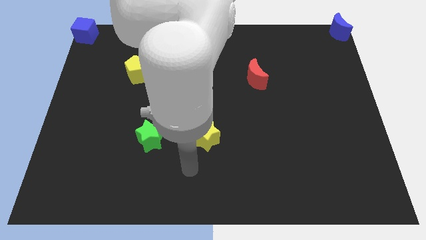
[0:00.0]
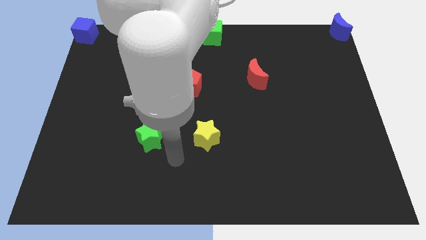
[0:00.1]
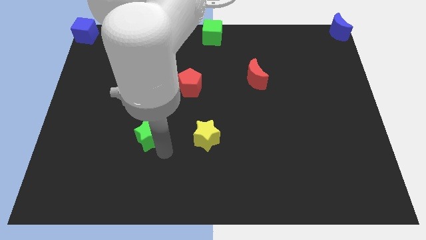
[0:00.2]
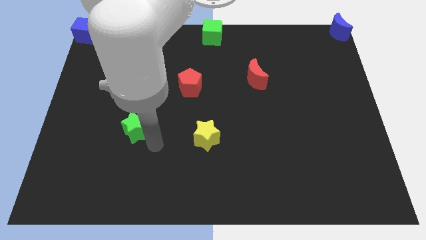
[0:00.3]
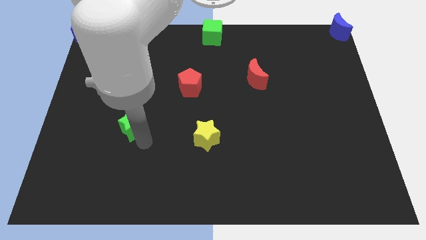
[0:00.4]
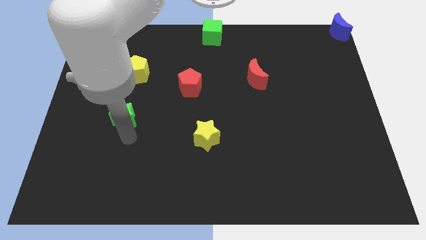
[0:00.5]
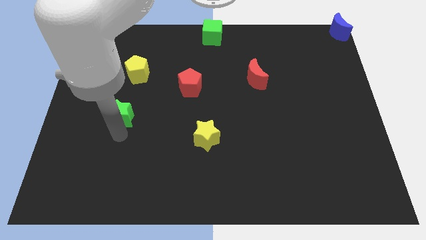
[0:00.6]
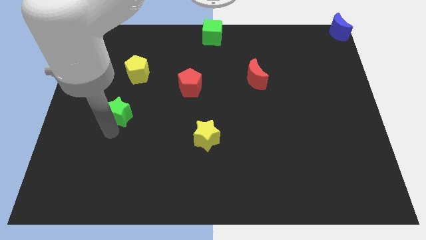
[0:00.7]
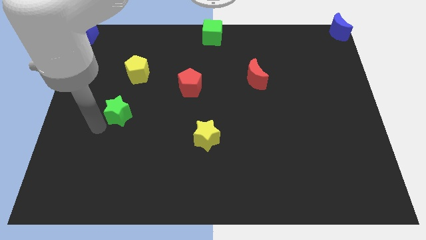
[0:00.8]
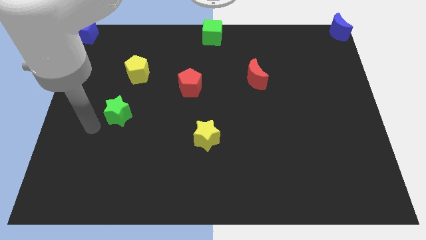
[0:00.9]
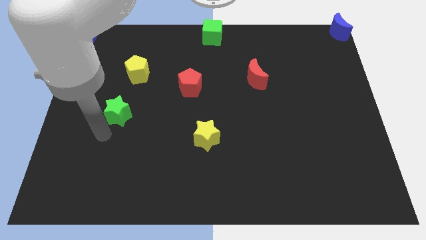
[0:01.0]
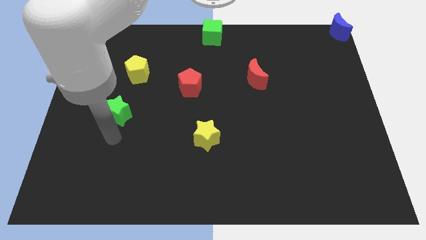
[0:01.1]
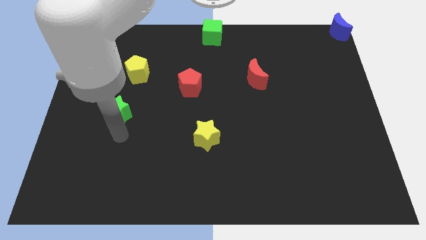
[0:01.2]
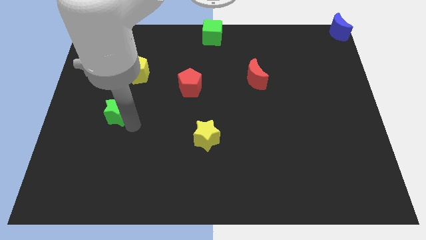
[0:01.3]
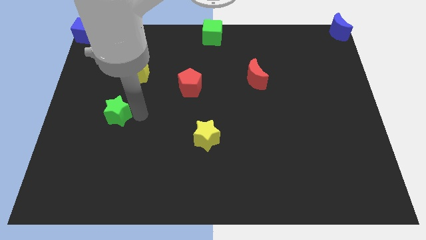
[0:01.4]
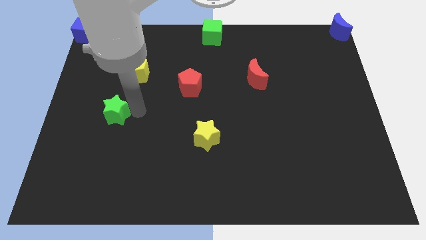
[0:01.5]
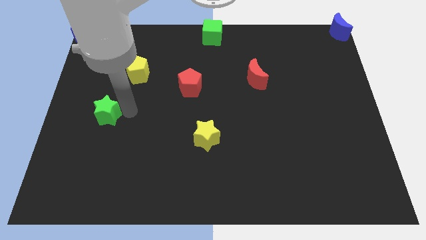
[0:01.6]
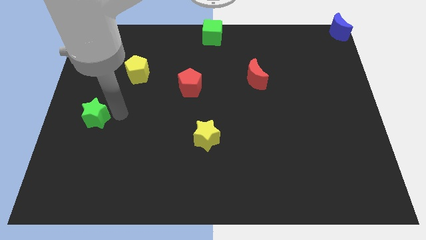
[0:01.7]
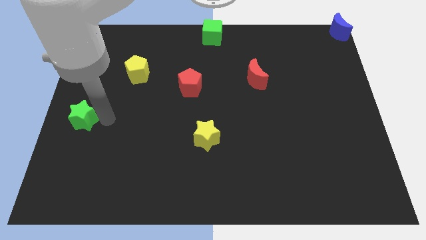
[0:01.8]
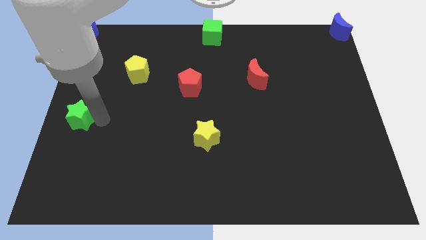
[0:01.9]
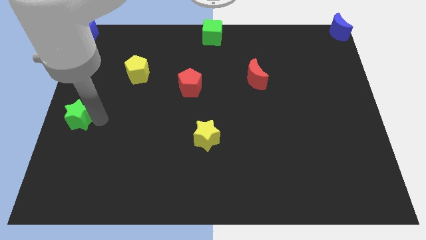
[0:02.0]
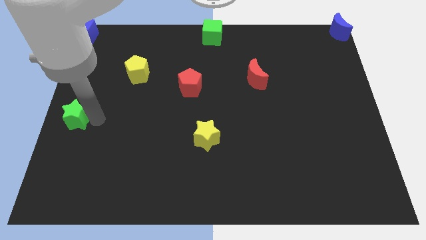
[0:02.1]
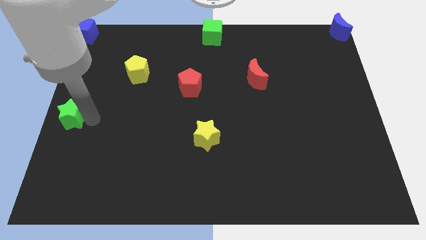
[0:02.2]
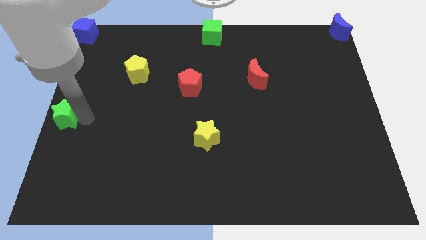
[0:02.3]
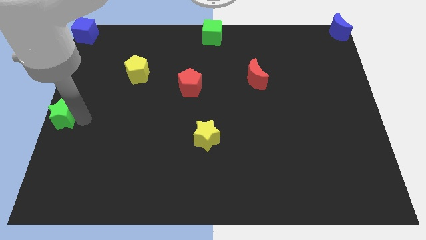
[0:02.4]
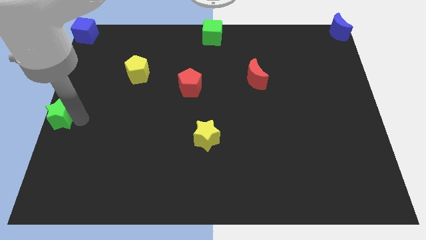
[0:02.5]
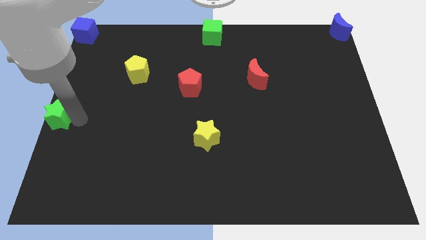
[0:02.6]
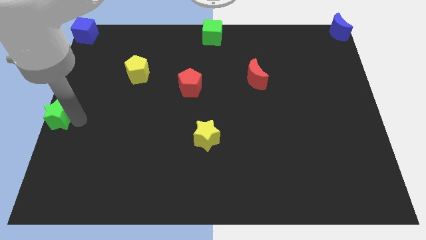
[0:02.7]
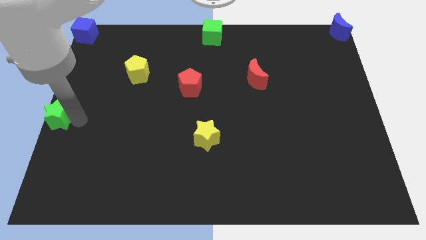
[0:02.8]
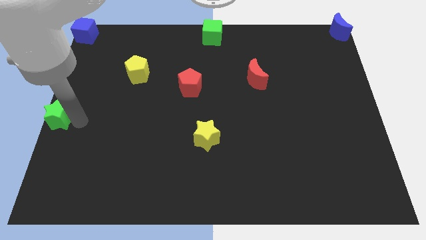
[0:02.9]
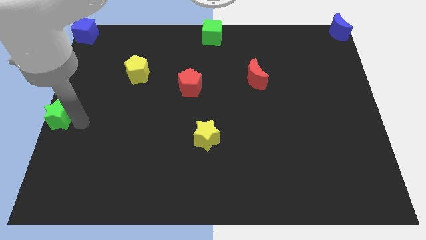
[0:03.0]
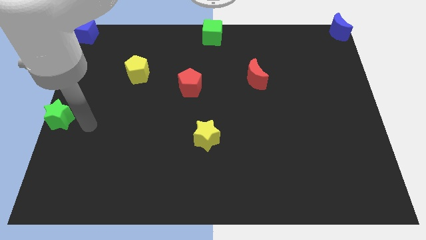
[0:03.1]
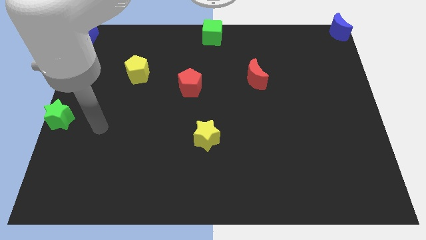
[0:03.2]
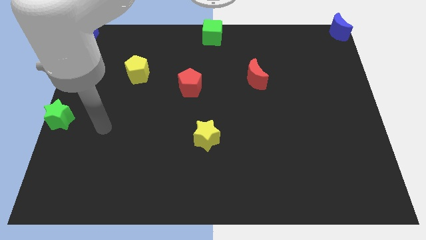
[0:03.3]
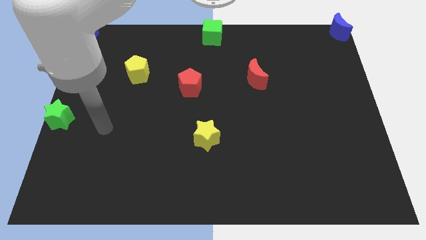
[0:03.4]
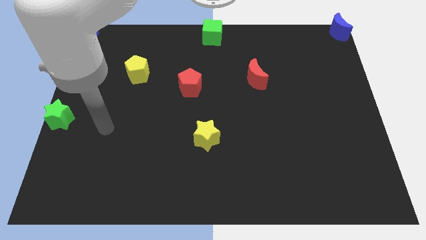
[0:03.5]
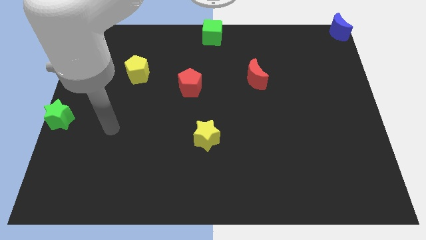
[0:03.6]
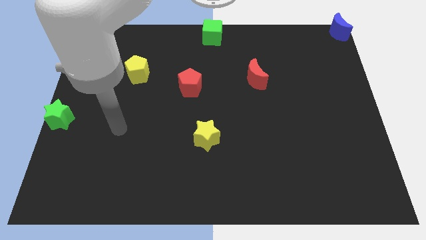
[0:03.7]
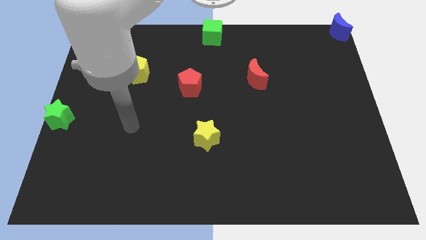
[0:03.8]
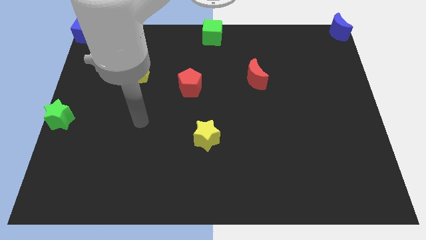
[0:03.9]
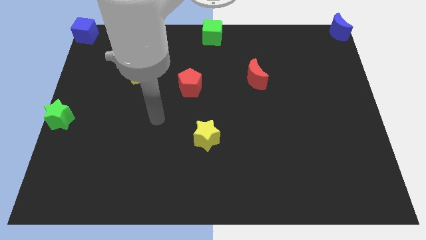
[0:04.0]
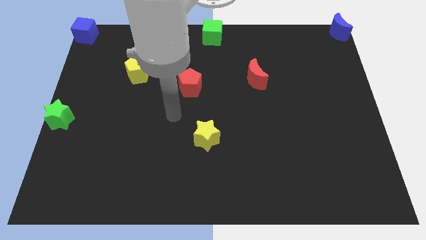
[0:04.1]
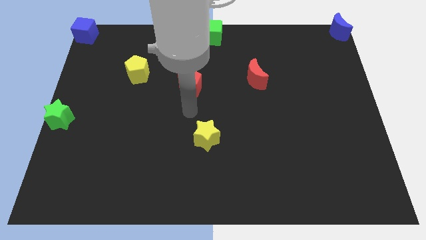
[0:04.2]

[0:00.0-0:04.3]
place the green star to the left center

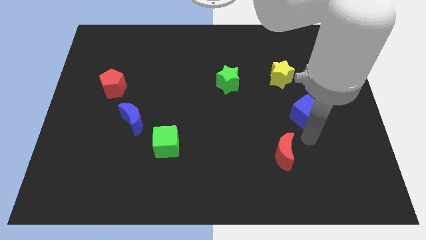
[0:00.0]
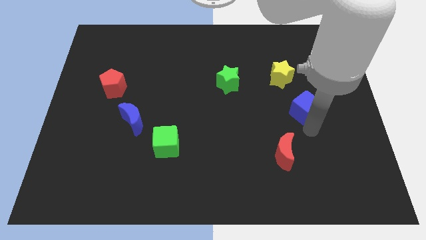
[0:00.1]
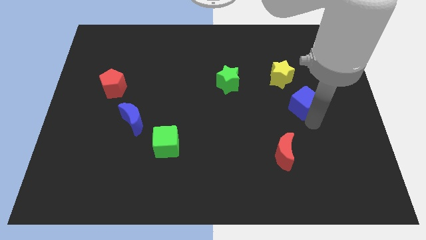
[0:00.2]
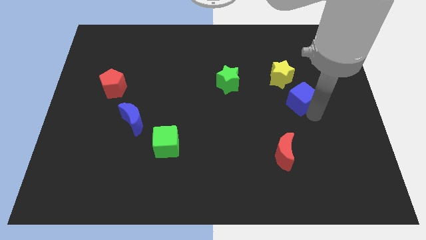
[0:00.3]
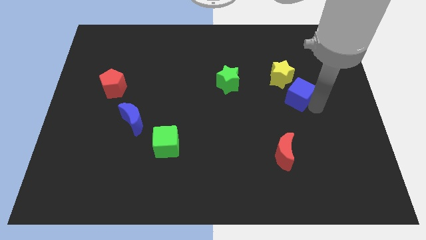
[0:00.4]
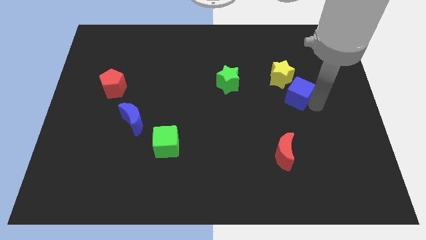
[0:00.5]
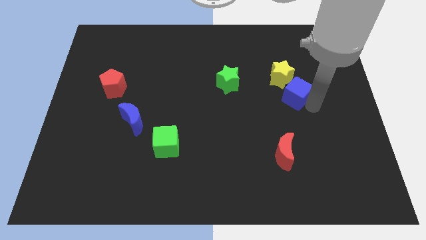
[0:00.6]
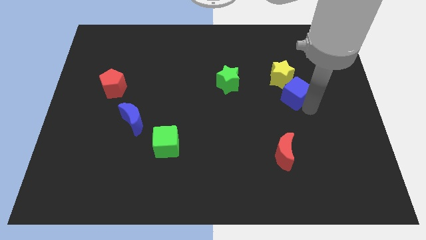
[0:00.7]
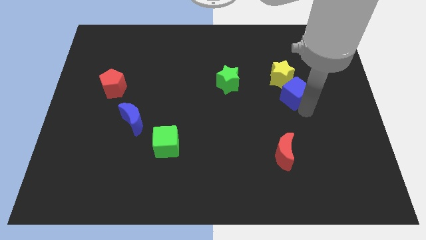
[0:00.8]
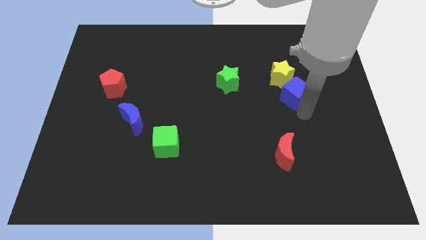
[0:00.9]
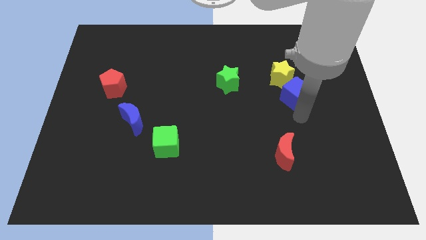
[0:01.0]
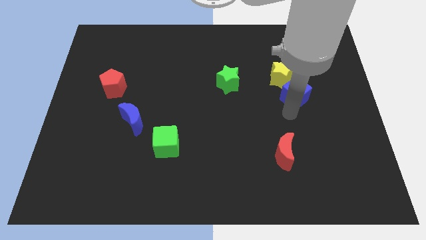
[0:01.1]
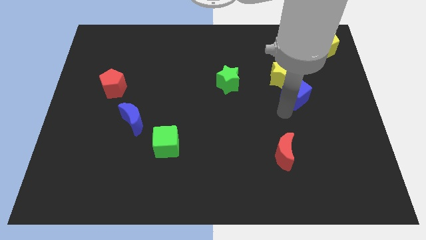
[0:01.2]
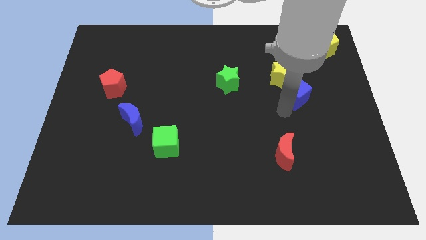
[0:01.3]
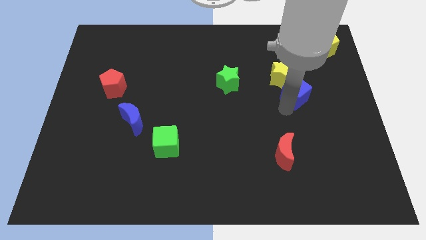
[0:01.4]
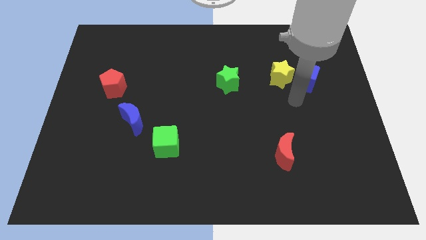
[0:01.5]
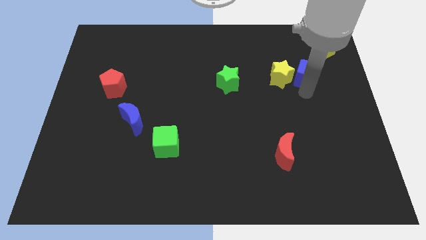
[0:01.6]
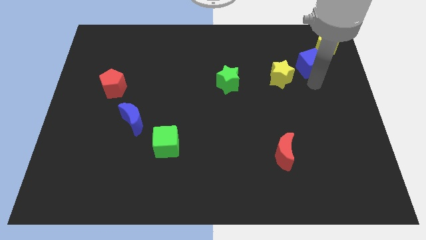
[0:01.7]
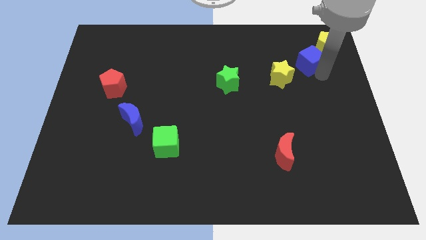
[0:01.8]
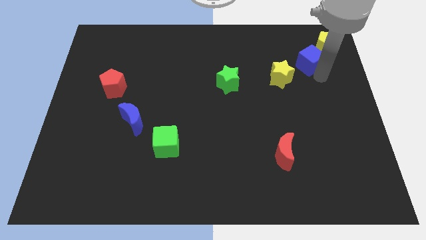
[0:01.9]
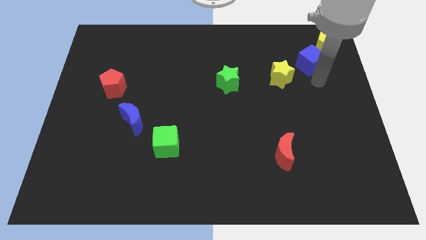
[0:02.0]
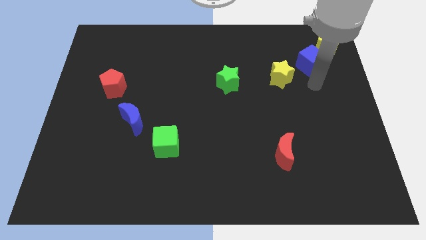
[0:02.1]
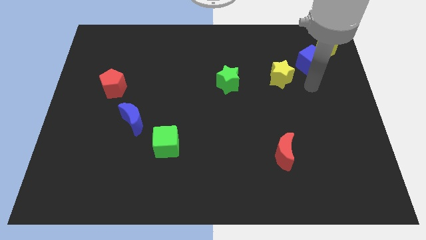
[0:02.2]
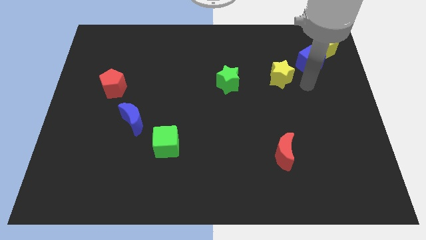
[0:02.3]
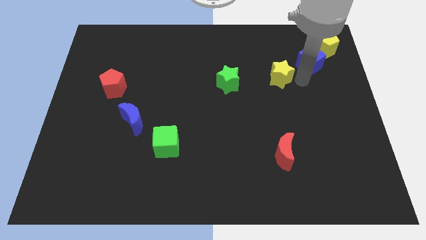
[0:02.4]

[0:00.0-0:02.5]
place the blue cube in between the yellow pentagon and yellow star

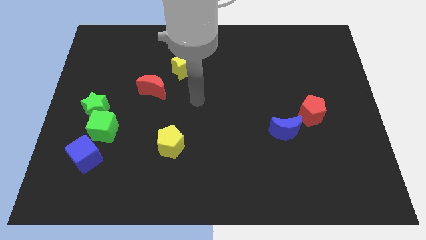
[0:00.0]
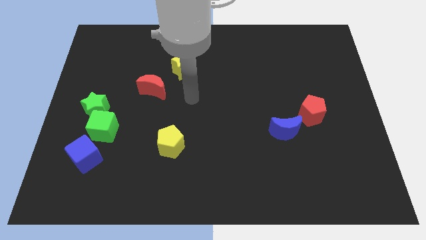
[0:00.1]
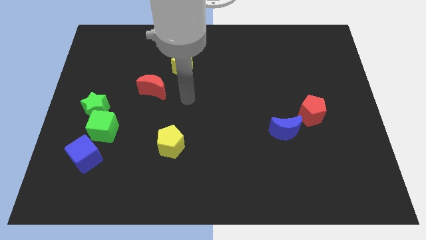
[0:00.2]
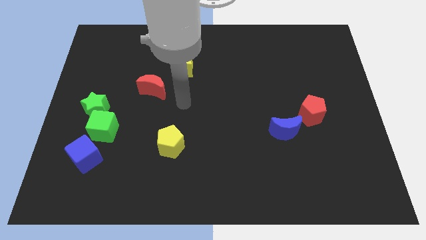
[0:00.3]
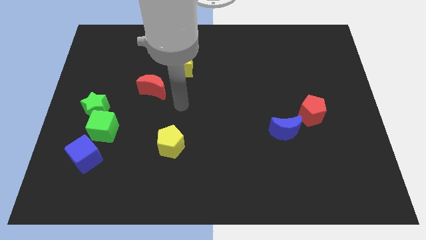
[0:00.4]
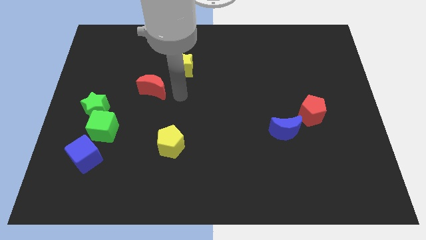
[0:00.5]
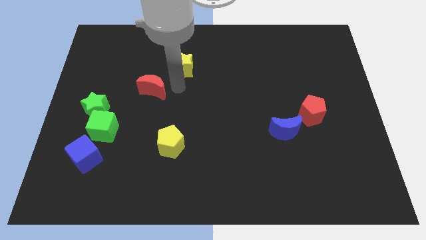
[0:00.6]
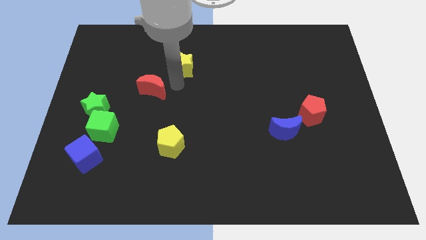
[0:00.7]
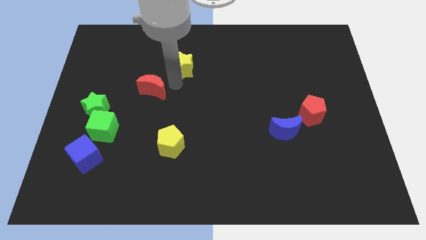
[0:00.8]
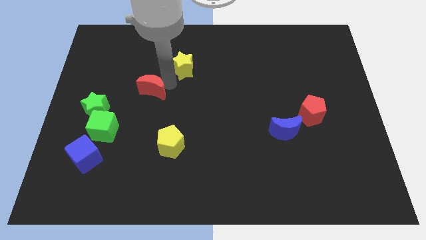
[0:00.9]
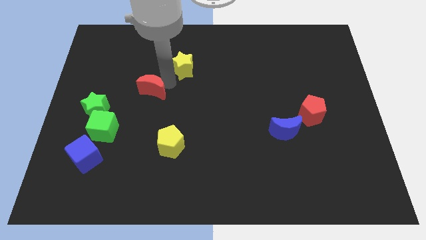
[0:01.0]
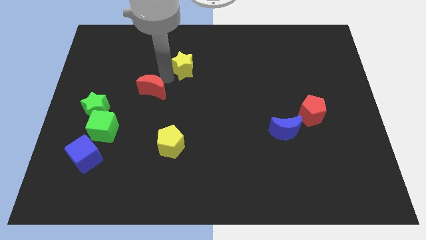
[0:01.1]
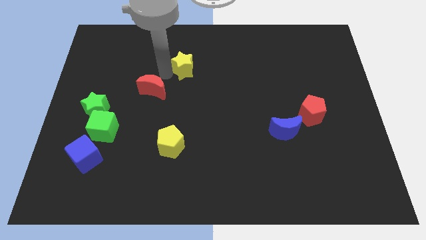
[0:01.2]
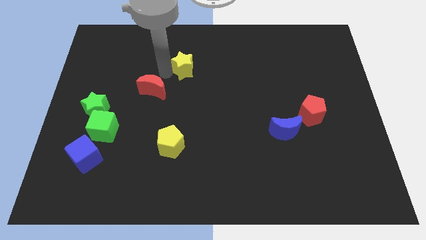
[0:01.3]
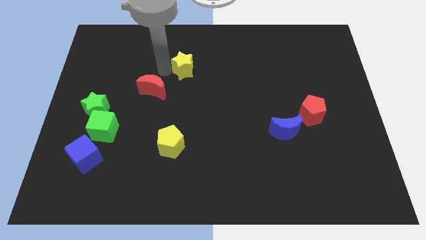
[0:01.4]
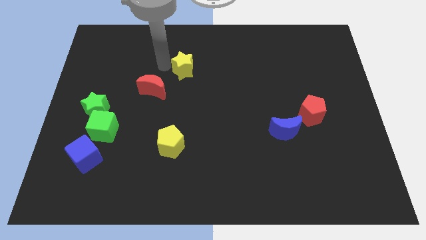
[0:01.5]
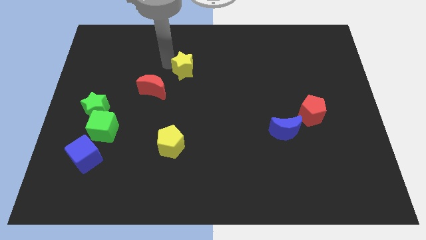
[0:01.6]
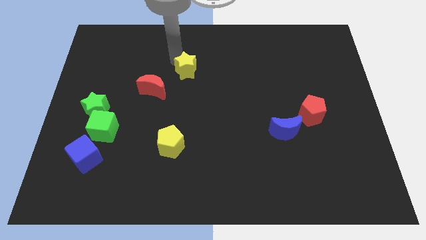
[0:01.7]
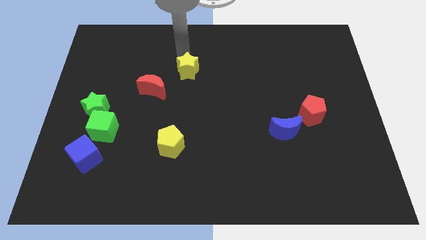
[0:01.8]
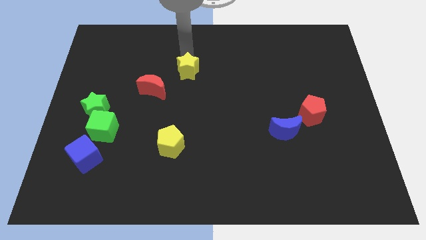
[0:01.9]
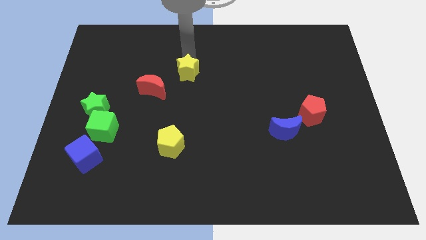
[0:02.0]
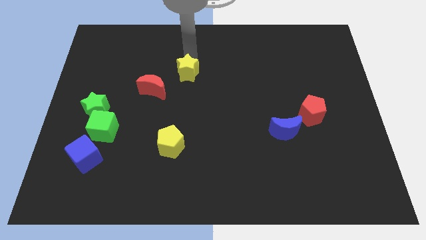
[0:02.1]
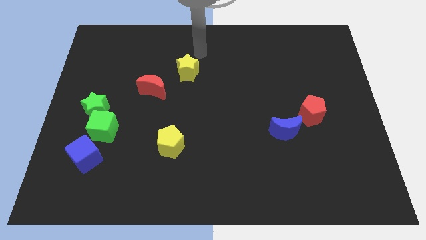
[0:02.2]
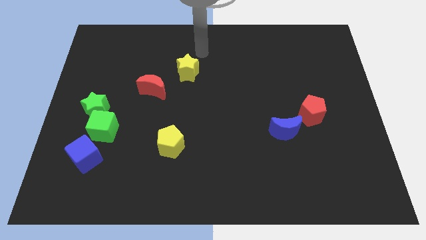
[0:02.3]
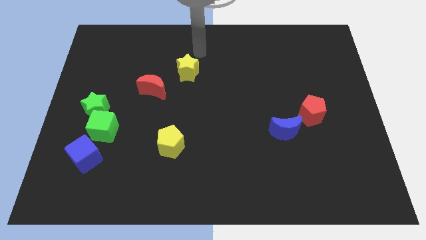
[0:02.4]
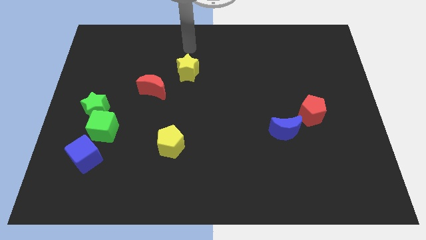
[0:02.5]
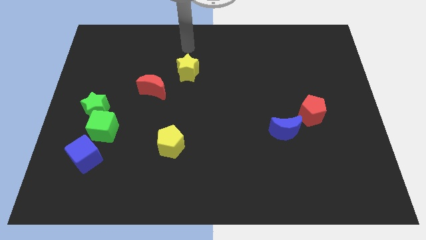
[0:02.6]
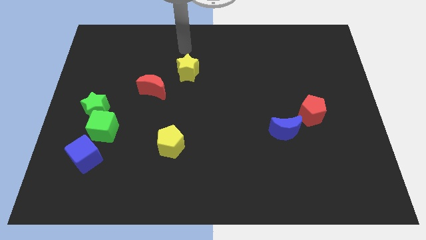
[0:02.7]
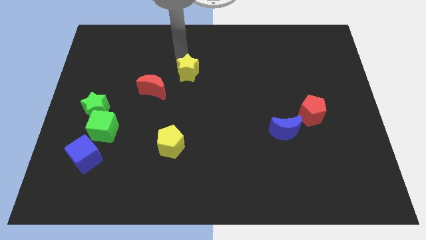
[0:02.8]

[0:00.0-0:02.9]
point your arm above the yellow star
